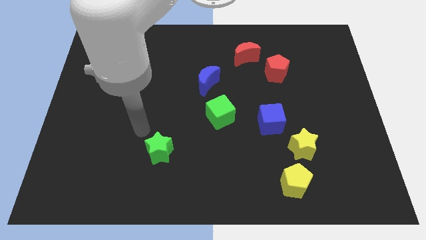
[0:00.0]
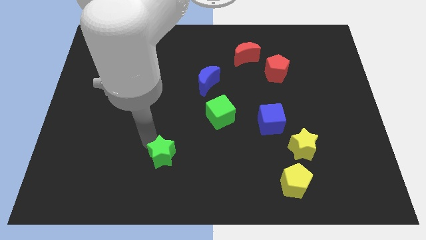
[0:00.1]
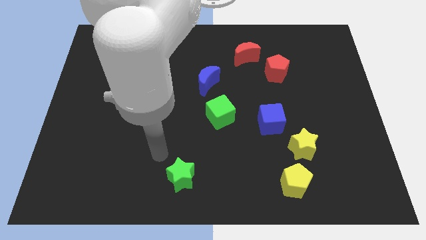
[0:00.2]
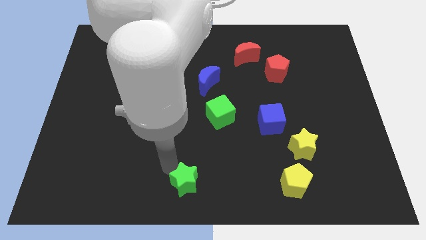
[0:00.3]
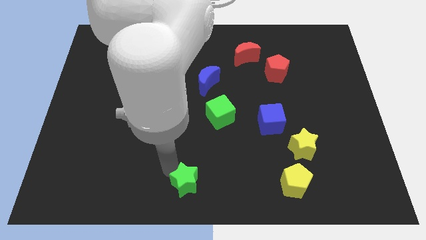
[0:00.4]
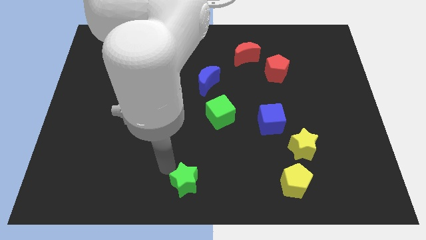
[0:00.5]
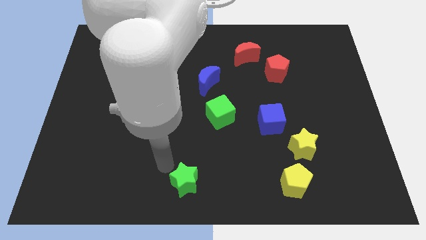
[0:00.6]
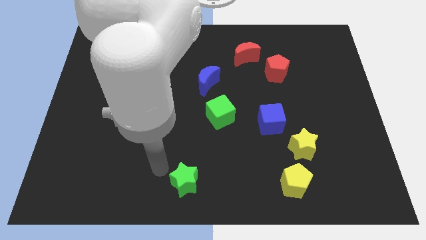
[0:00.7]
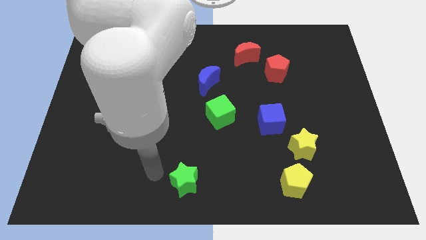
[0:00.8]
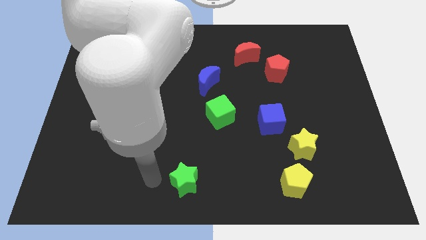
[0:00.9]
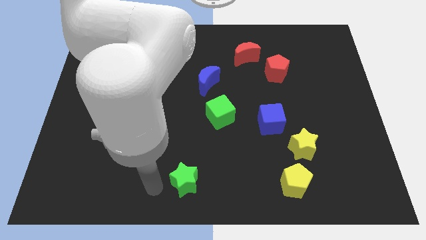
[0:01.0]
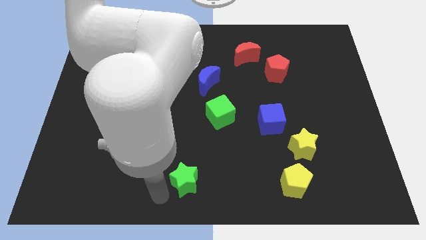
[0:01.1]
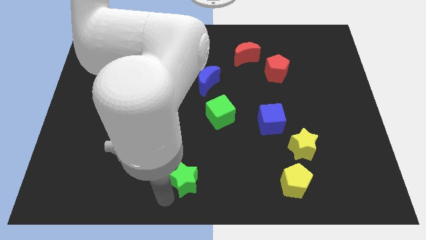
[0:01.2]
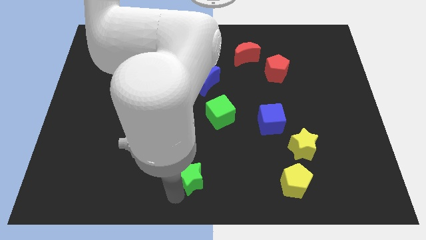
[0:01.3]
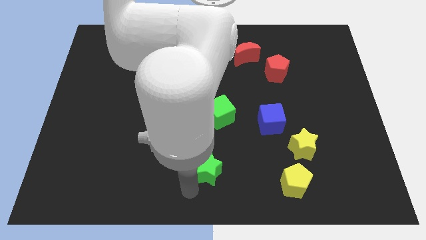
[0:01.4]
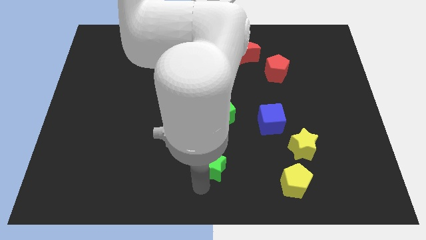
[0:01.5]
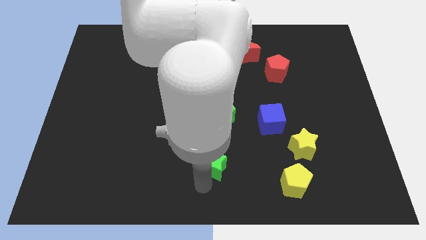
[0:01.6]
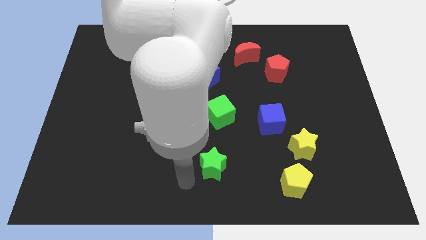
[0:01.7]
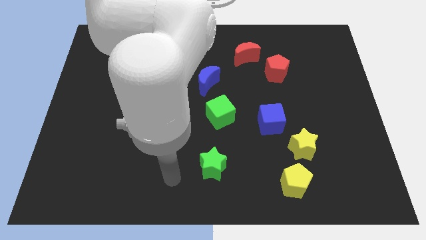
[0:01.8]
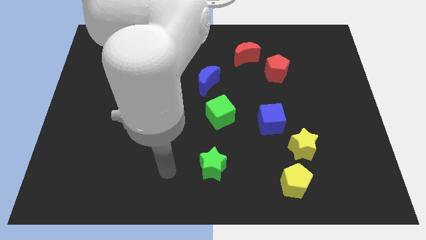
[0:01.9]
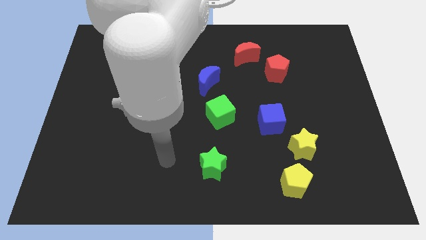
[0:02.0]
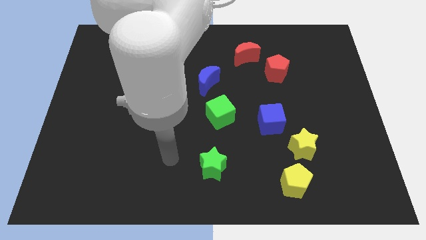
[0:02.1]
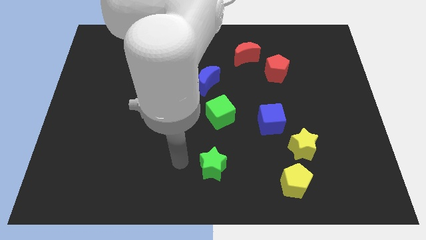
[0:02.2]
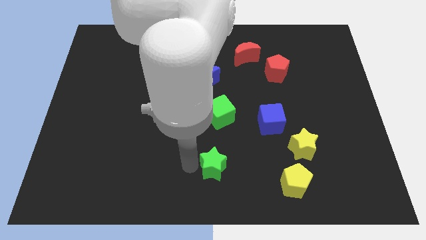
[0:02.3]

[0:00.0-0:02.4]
place the green star below the green cube

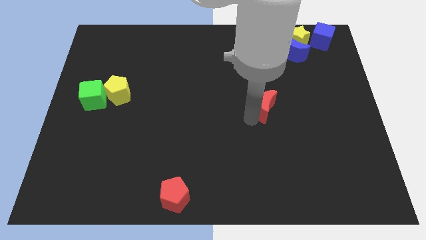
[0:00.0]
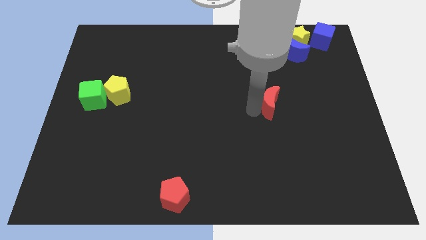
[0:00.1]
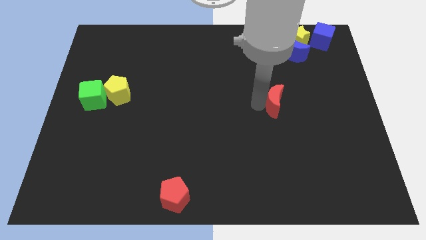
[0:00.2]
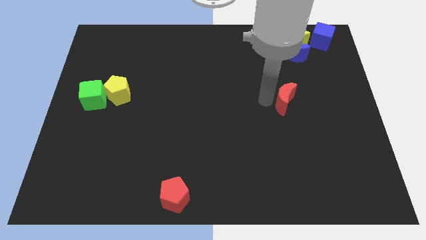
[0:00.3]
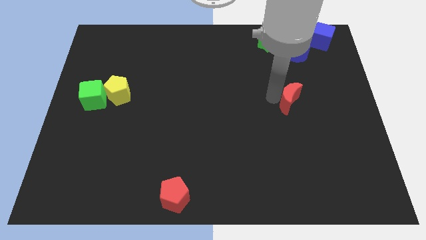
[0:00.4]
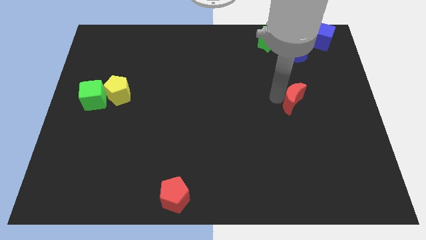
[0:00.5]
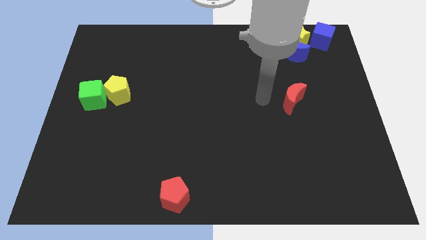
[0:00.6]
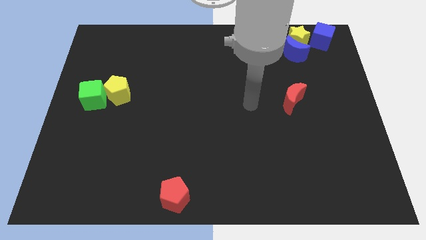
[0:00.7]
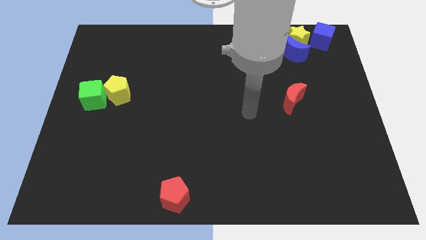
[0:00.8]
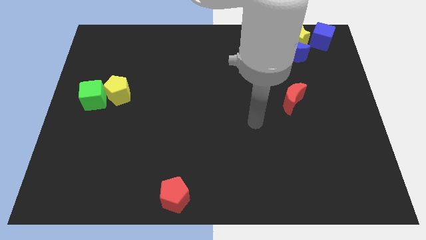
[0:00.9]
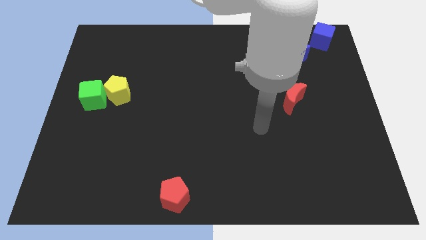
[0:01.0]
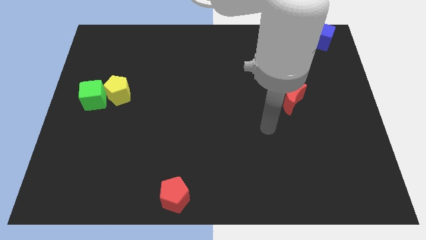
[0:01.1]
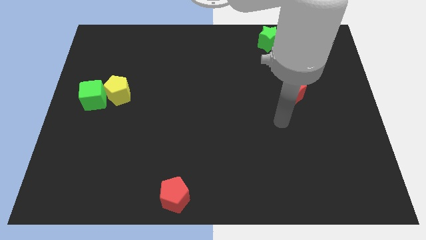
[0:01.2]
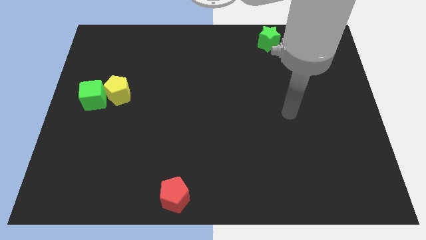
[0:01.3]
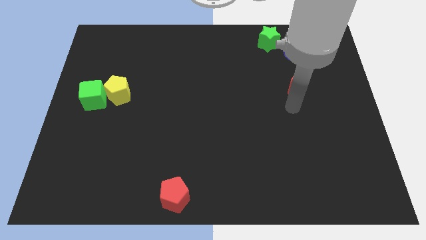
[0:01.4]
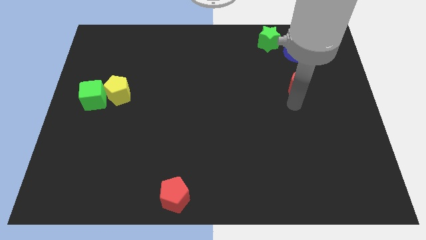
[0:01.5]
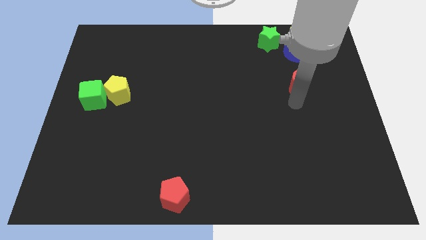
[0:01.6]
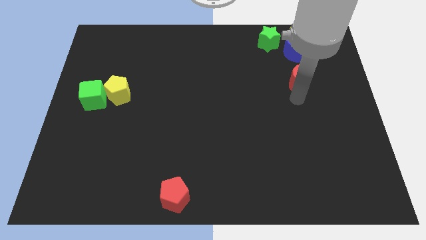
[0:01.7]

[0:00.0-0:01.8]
push red crescent below yellow star

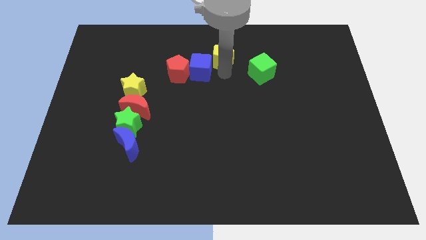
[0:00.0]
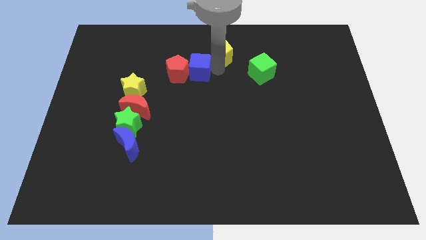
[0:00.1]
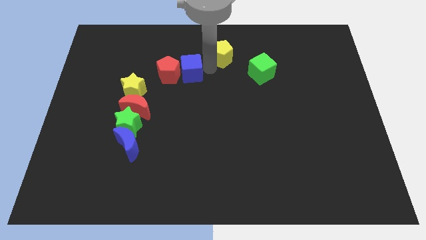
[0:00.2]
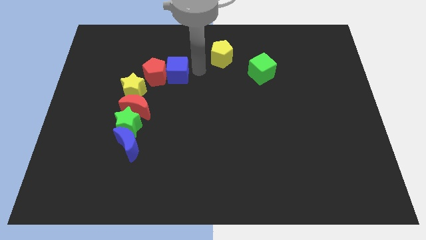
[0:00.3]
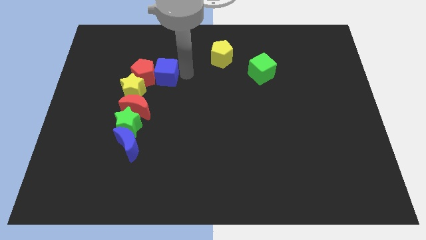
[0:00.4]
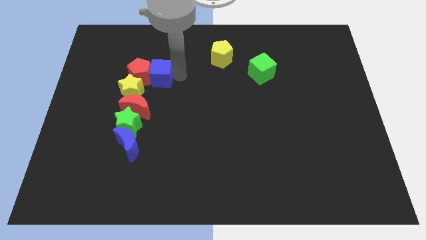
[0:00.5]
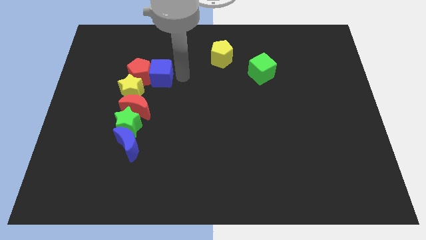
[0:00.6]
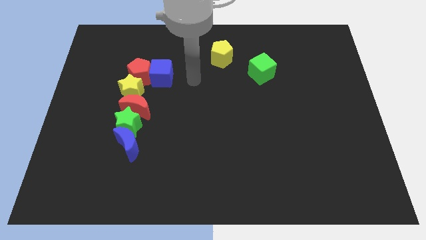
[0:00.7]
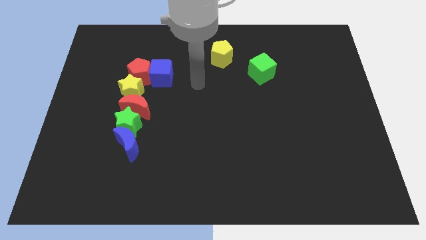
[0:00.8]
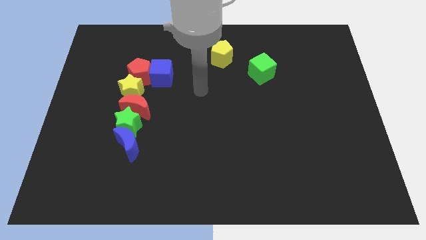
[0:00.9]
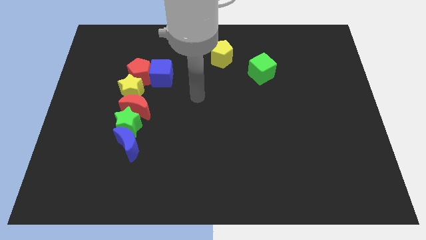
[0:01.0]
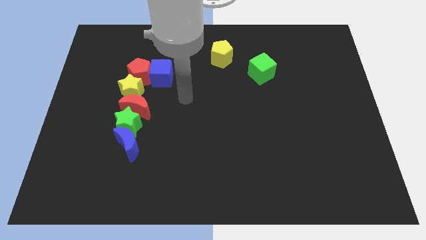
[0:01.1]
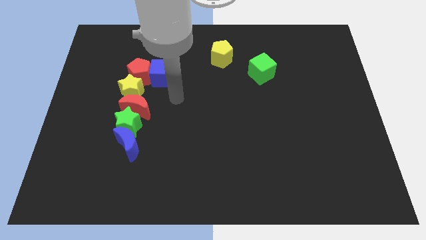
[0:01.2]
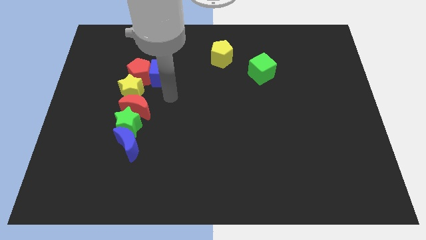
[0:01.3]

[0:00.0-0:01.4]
push the red pentagon above the yellow star

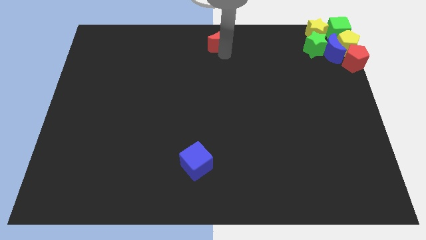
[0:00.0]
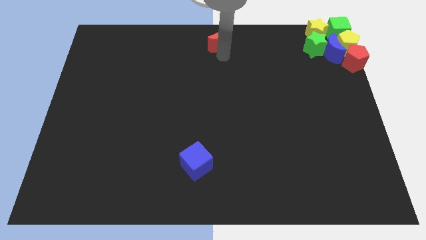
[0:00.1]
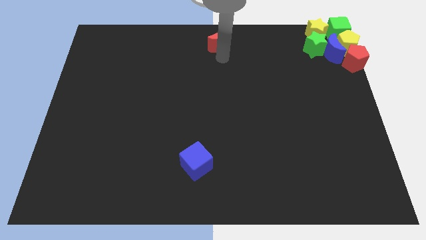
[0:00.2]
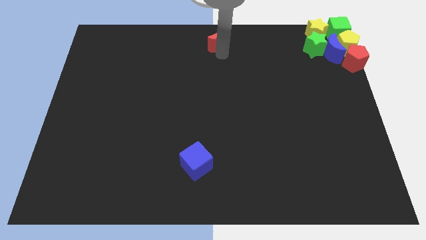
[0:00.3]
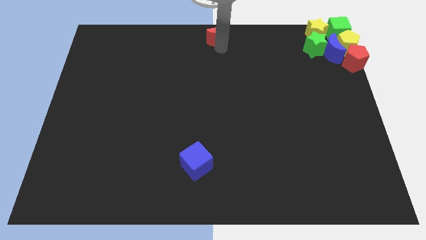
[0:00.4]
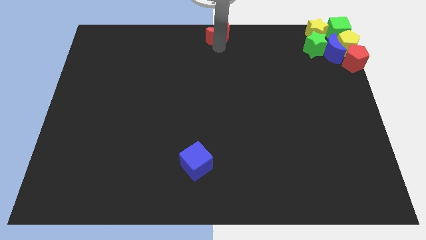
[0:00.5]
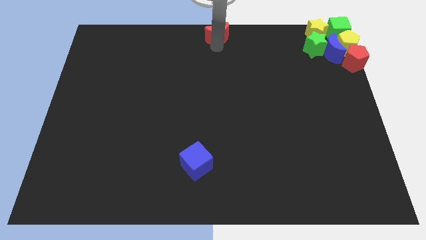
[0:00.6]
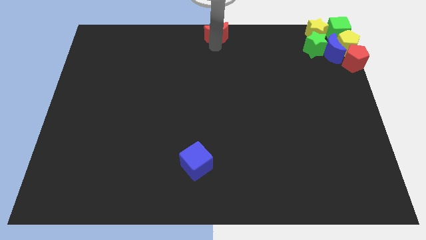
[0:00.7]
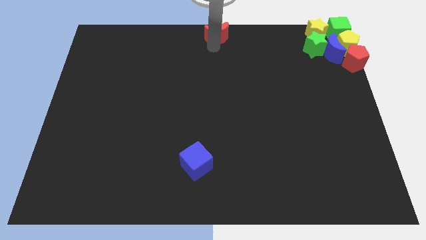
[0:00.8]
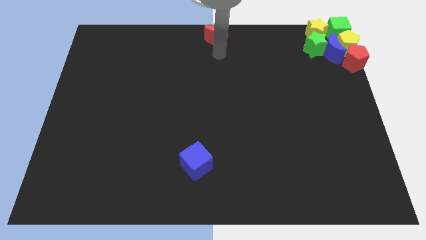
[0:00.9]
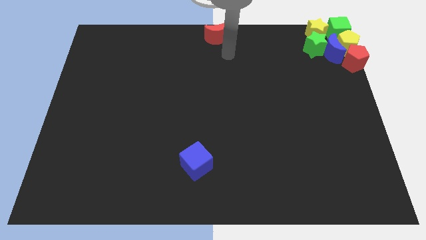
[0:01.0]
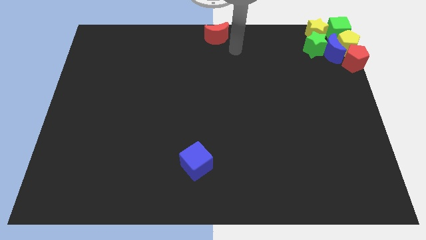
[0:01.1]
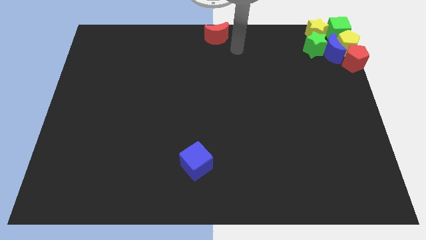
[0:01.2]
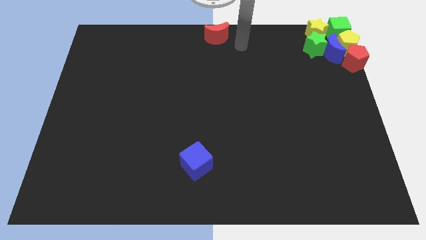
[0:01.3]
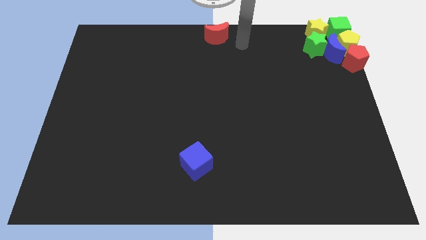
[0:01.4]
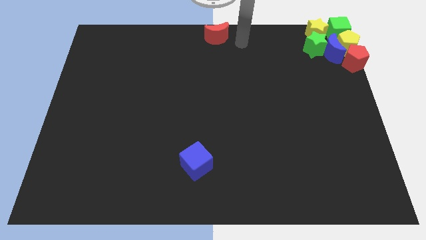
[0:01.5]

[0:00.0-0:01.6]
move the red crecent to the top center of the board

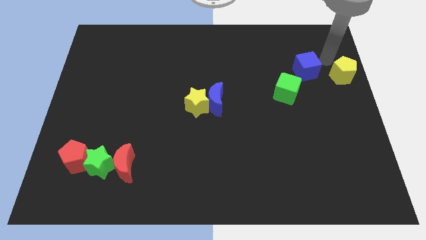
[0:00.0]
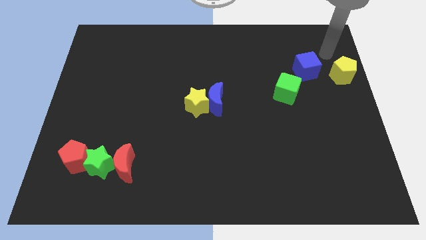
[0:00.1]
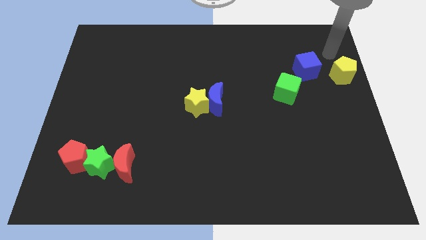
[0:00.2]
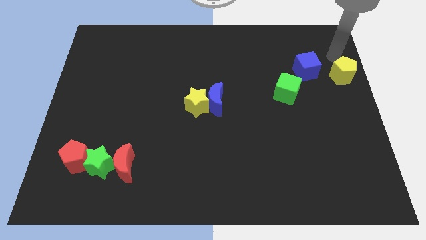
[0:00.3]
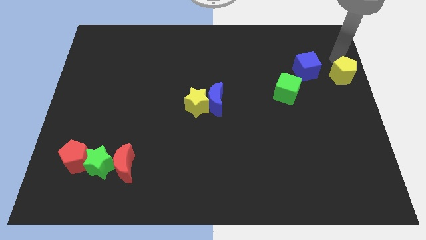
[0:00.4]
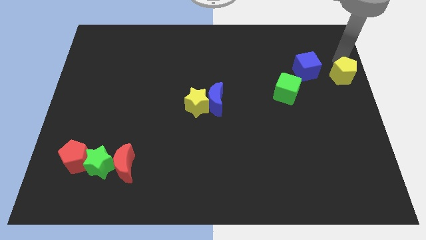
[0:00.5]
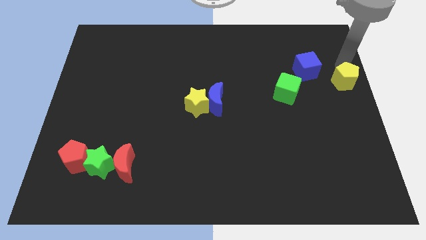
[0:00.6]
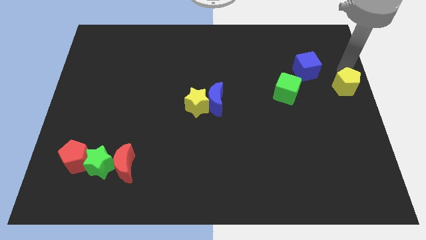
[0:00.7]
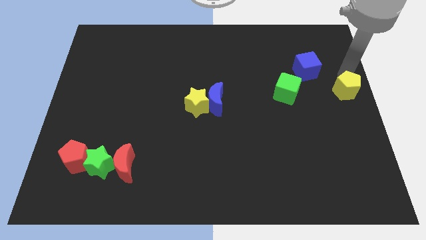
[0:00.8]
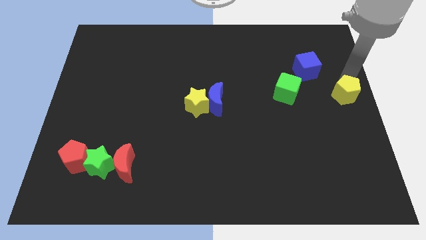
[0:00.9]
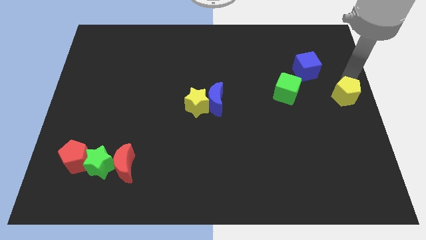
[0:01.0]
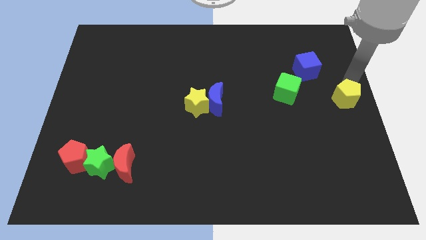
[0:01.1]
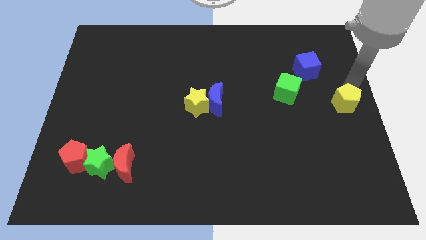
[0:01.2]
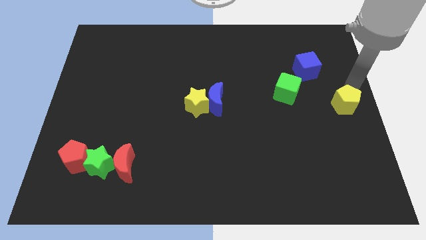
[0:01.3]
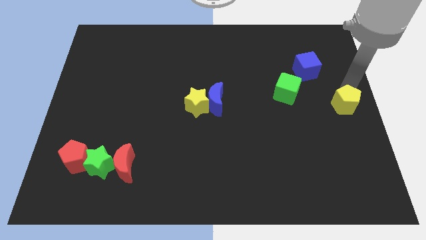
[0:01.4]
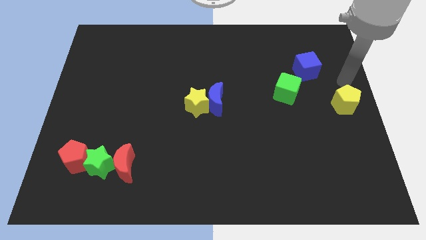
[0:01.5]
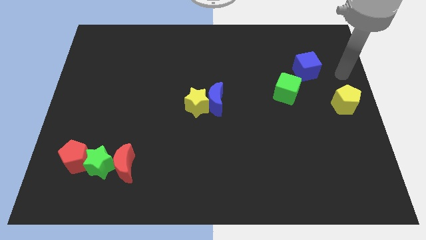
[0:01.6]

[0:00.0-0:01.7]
move the yellow pentagon near to the right center

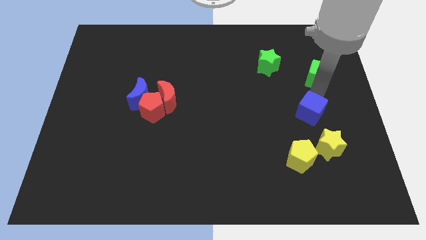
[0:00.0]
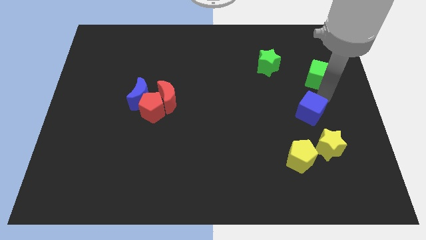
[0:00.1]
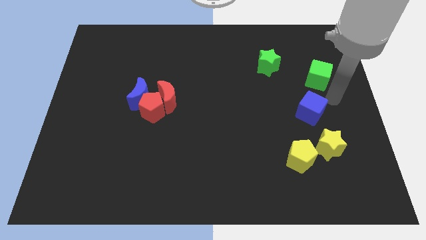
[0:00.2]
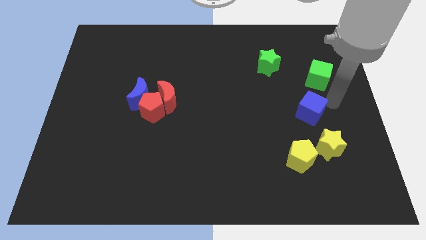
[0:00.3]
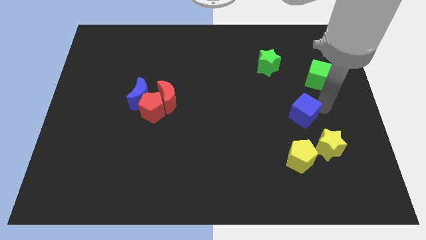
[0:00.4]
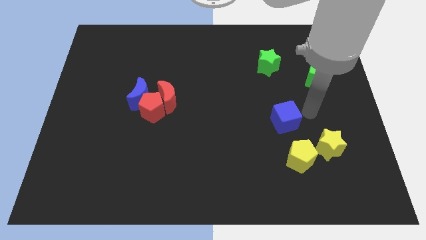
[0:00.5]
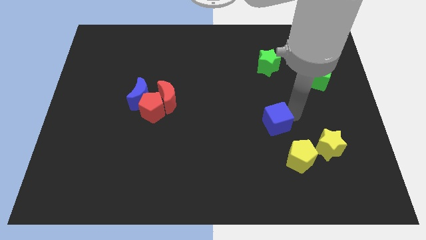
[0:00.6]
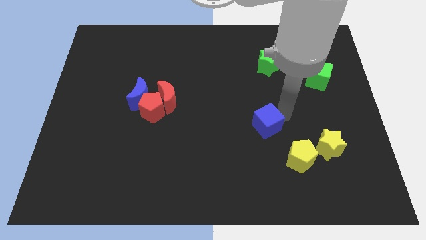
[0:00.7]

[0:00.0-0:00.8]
push blue cube below green star
